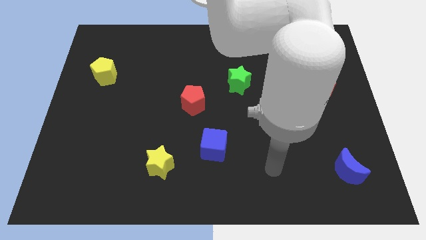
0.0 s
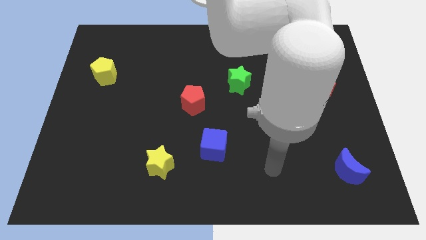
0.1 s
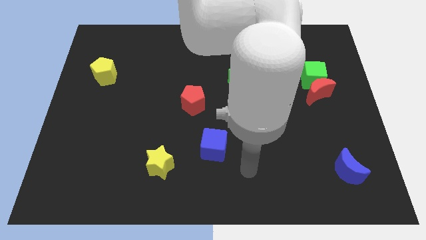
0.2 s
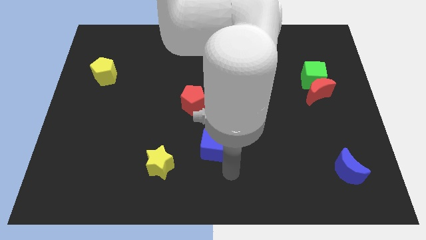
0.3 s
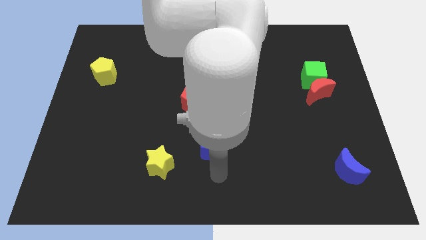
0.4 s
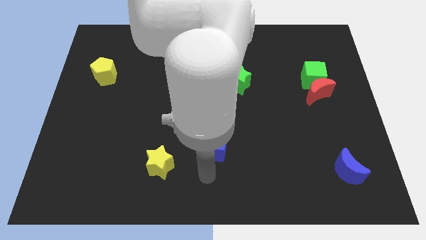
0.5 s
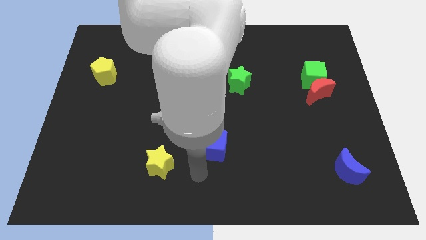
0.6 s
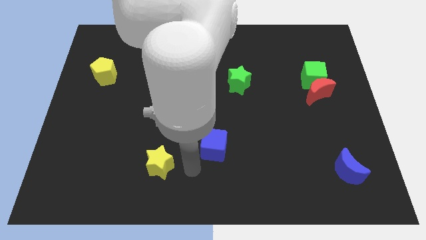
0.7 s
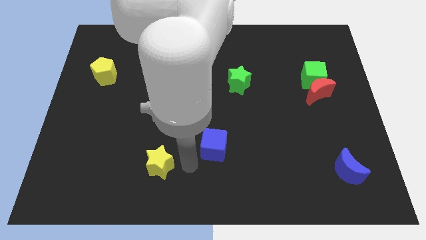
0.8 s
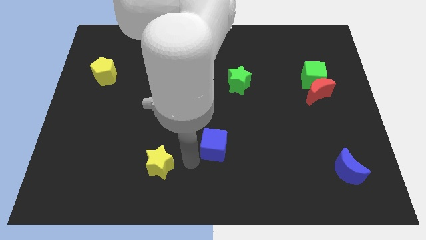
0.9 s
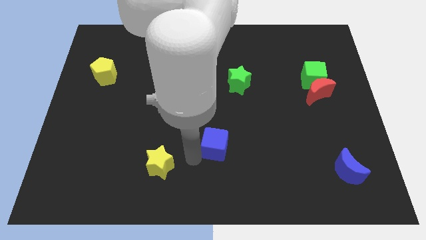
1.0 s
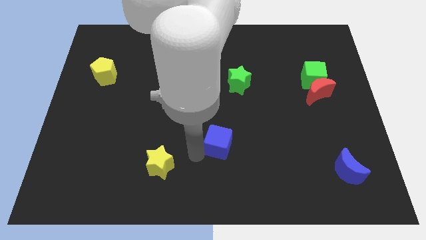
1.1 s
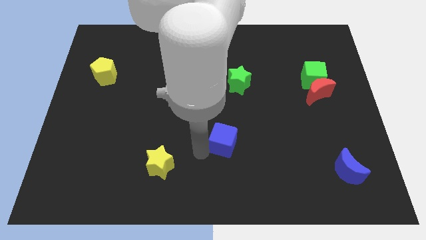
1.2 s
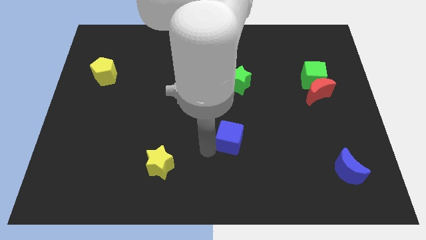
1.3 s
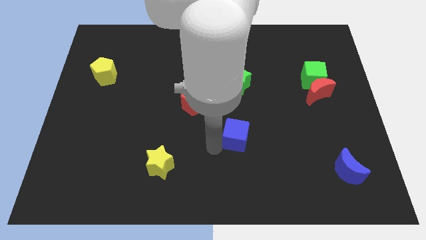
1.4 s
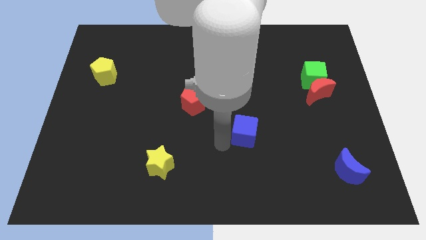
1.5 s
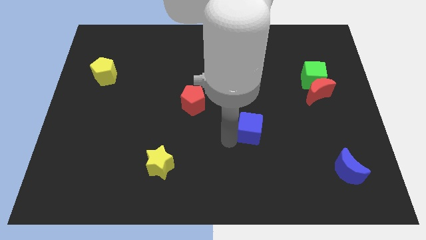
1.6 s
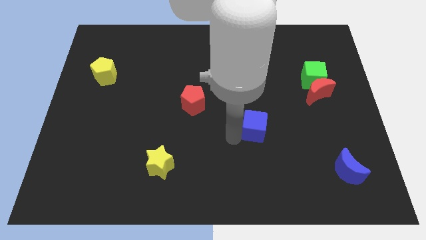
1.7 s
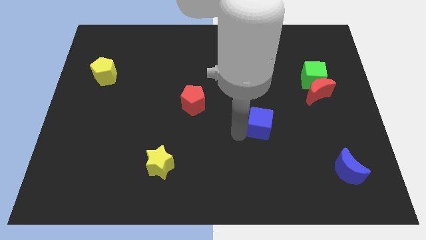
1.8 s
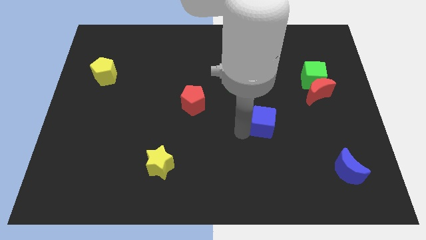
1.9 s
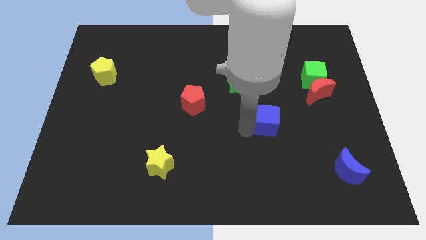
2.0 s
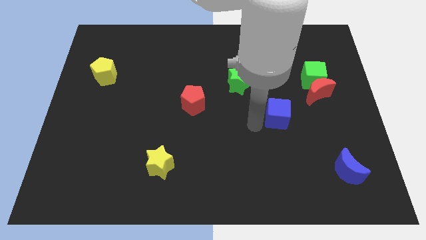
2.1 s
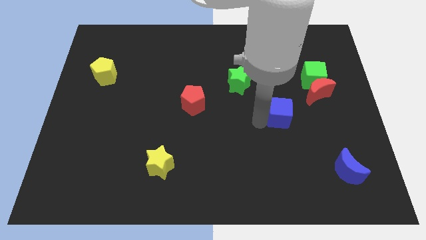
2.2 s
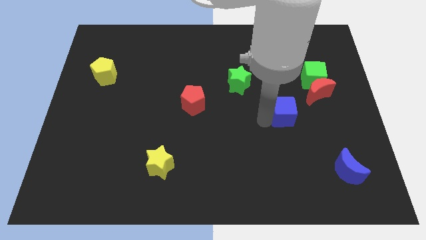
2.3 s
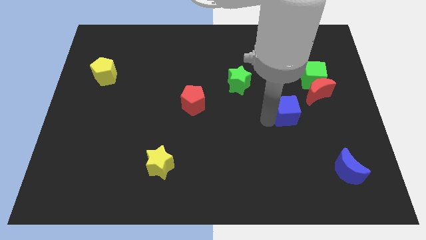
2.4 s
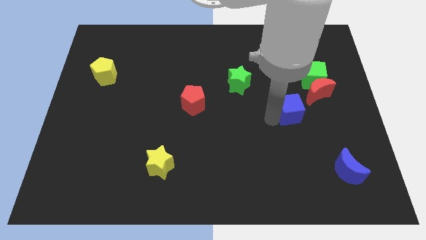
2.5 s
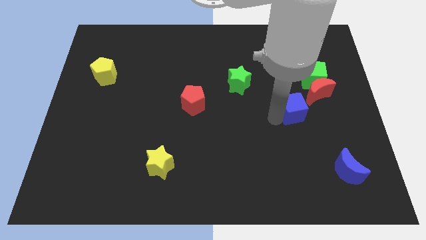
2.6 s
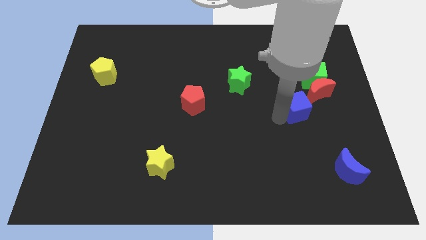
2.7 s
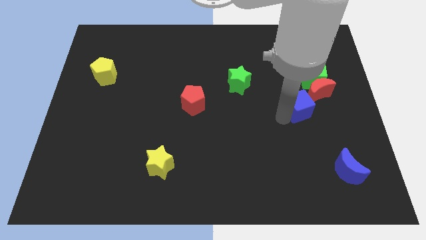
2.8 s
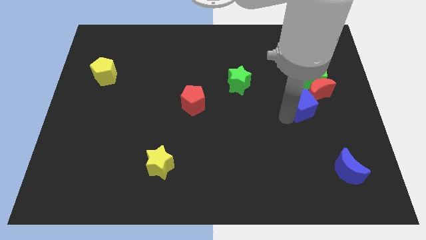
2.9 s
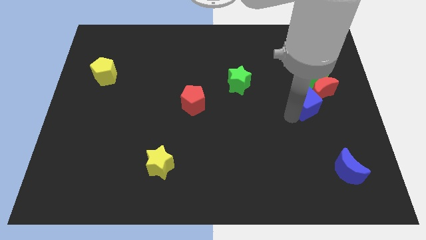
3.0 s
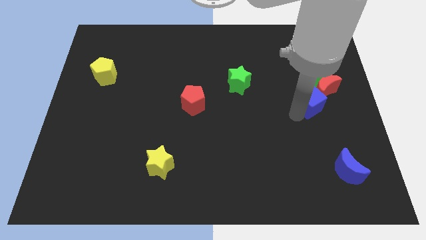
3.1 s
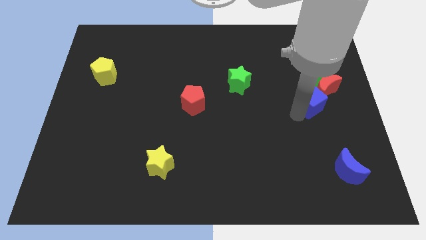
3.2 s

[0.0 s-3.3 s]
move the blue cube next to the red moon

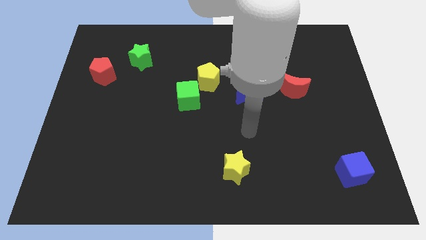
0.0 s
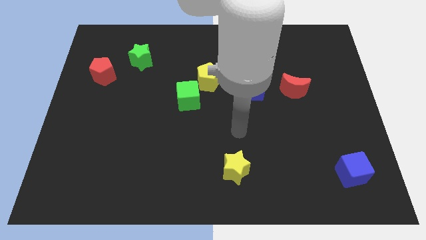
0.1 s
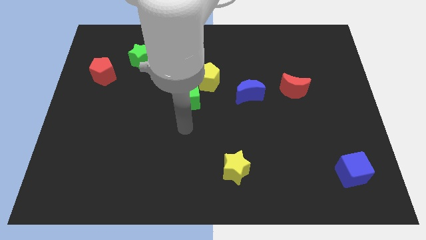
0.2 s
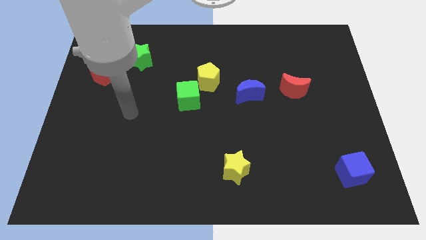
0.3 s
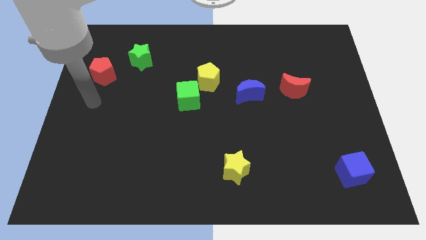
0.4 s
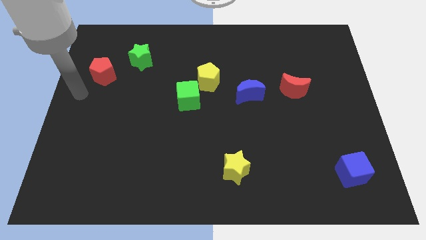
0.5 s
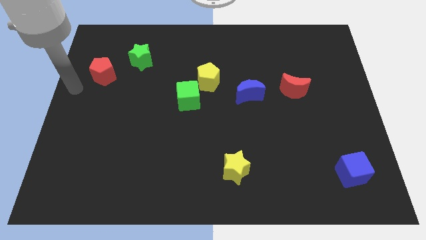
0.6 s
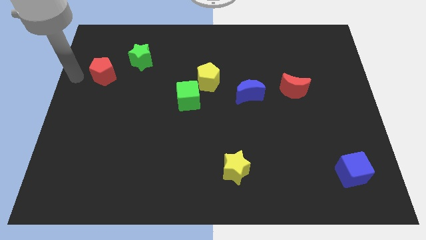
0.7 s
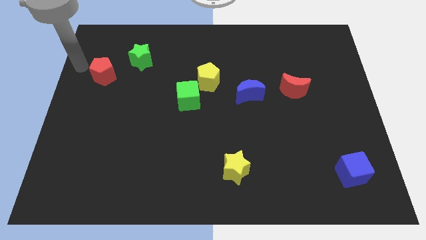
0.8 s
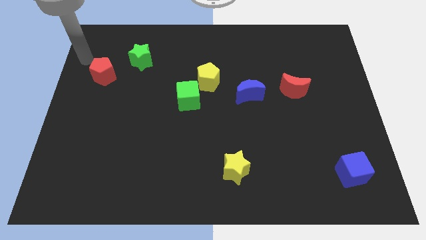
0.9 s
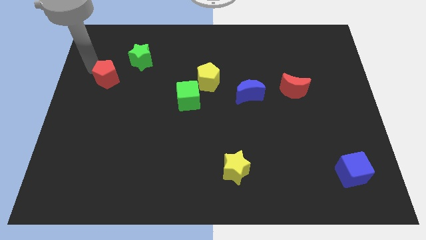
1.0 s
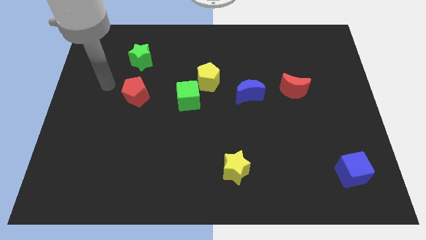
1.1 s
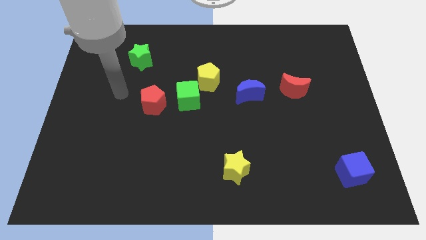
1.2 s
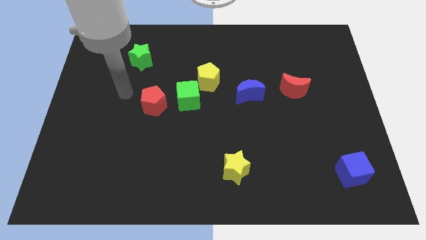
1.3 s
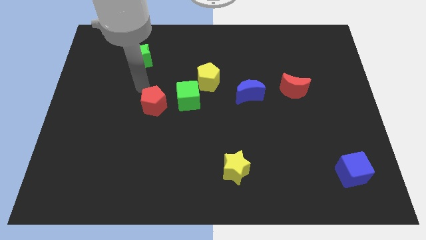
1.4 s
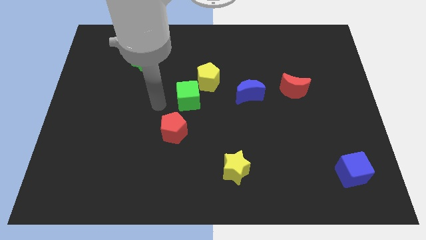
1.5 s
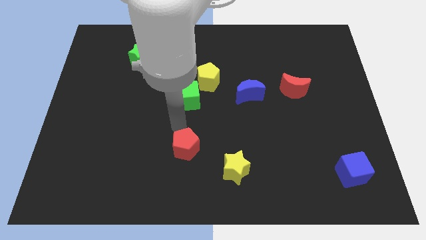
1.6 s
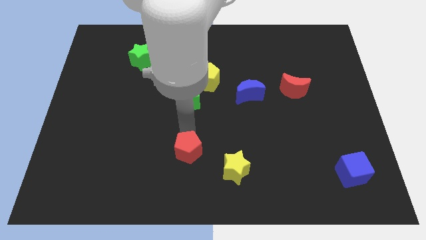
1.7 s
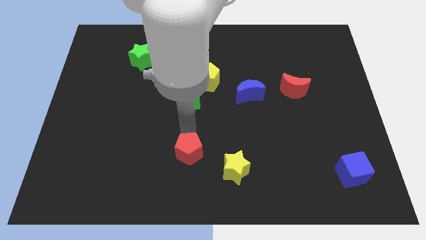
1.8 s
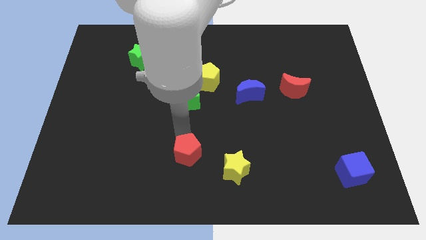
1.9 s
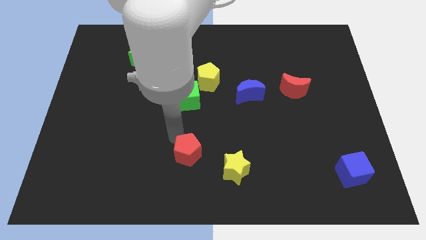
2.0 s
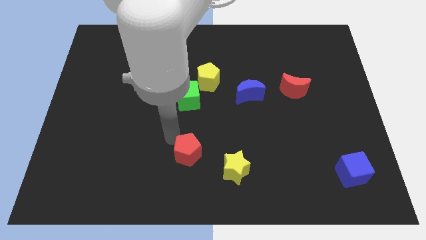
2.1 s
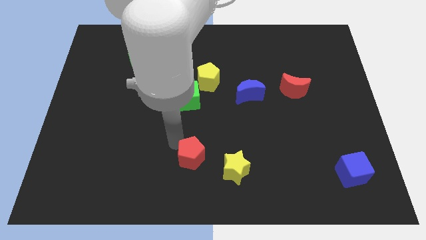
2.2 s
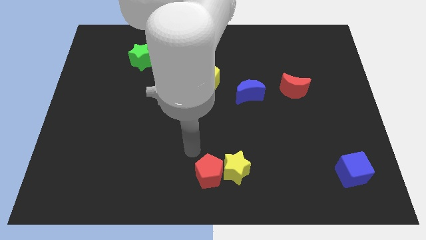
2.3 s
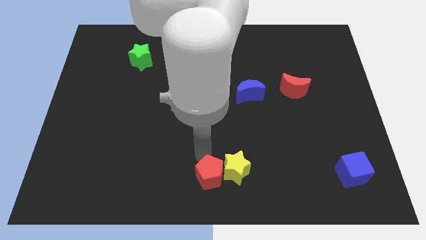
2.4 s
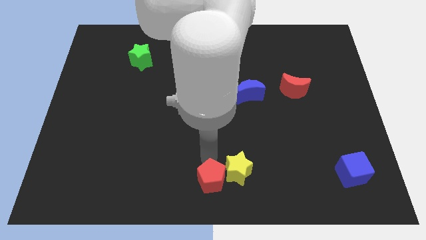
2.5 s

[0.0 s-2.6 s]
put the red pentagon to the yellow star

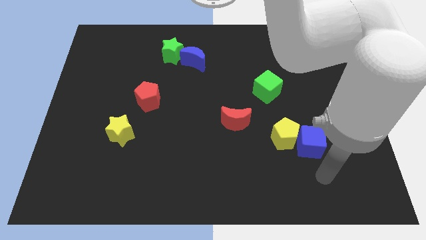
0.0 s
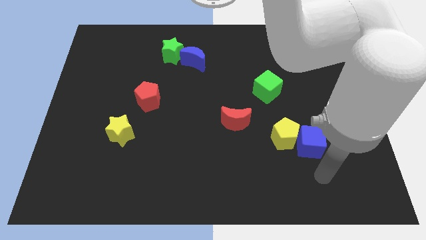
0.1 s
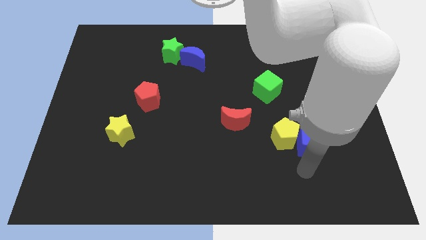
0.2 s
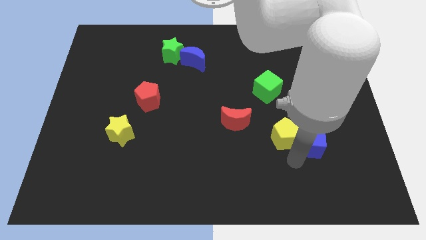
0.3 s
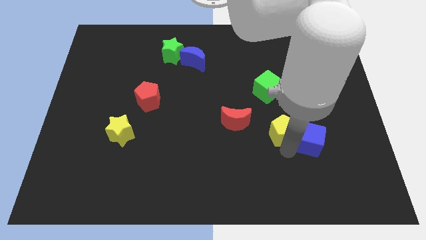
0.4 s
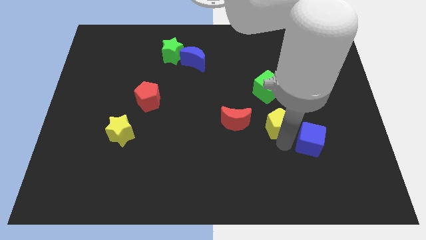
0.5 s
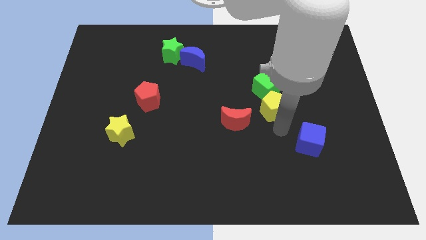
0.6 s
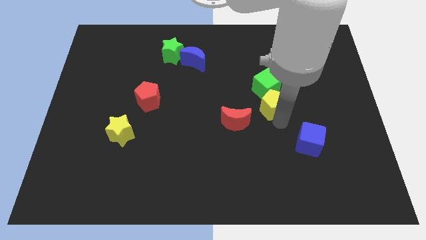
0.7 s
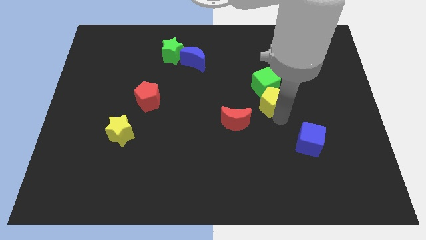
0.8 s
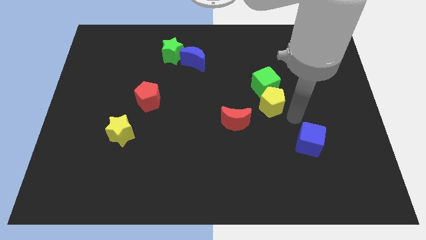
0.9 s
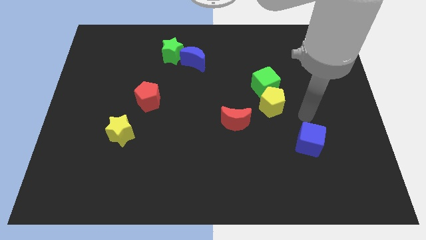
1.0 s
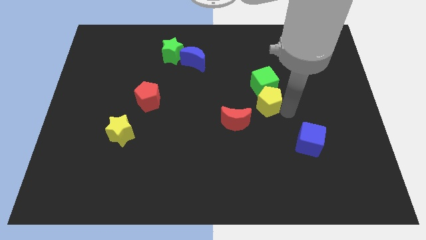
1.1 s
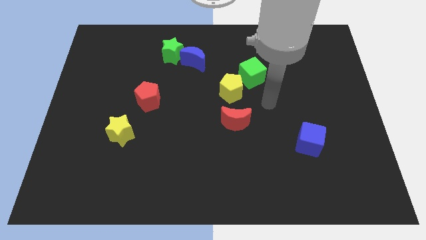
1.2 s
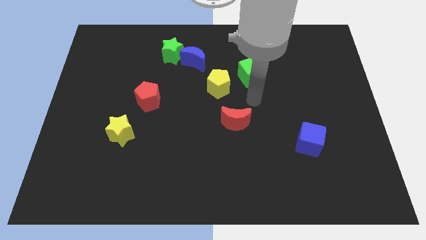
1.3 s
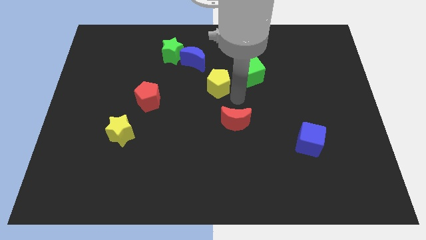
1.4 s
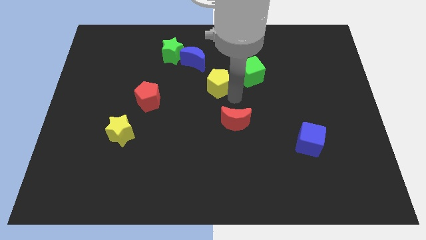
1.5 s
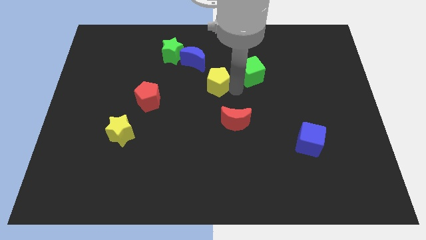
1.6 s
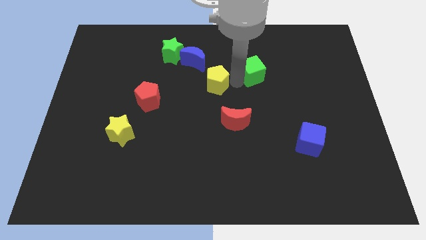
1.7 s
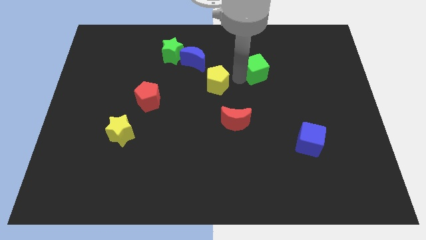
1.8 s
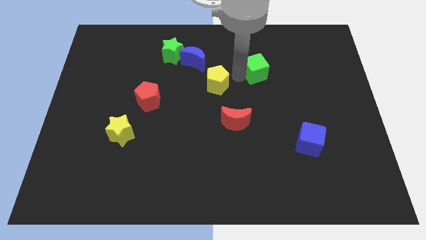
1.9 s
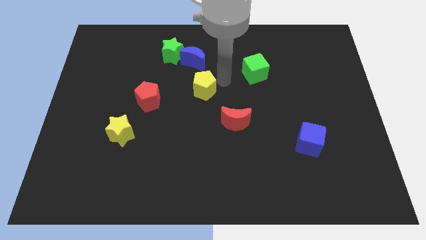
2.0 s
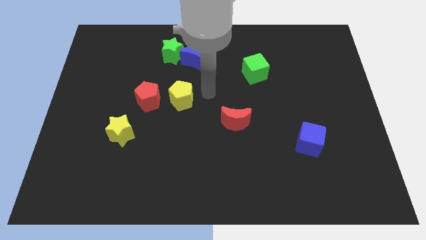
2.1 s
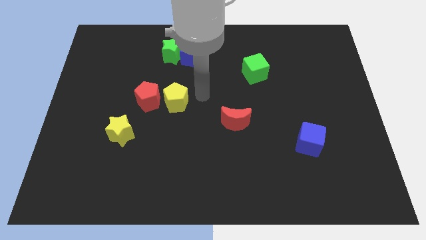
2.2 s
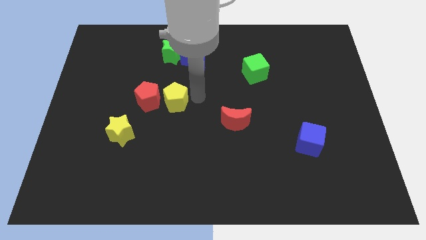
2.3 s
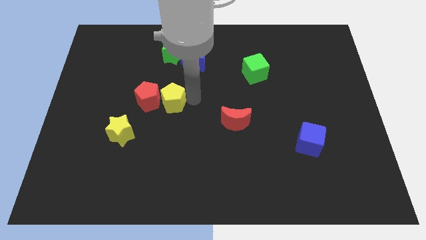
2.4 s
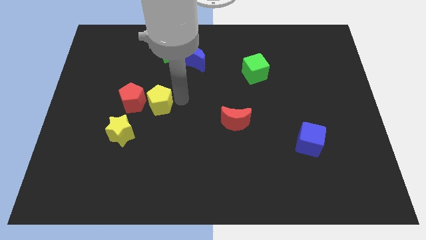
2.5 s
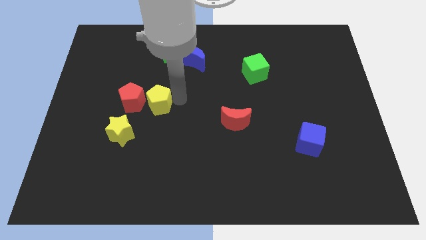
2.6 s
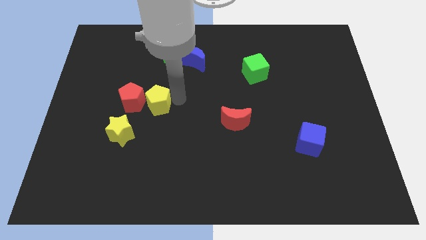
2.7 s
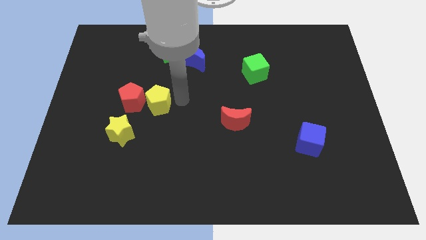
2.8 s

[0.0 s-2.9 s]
slide the yellow pentagon next to the red pentagon
